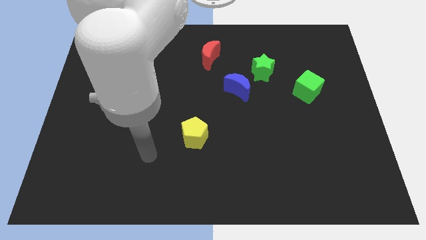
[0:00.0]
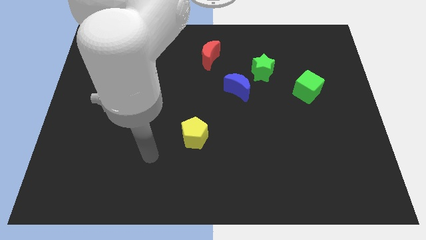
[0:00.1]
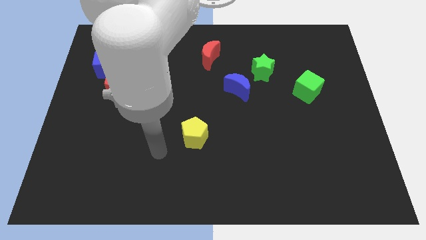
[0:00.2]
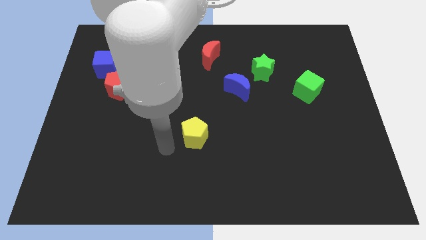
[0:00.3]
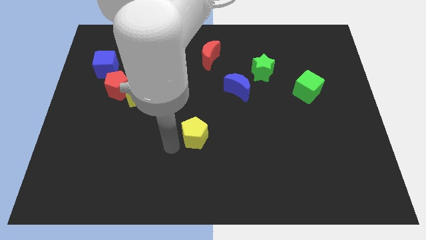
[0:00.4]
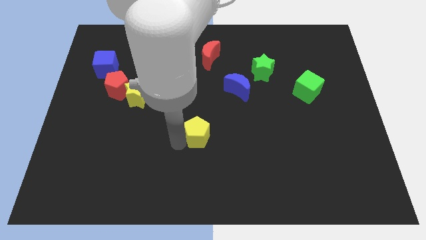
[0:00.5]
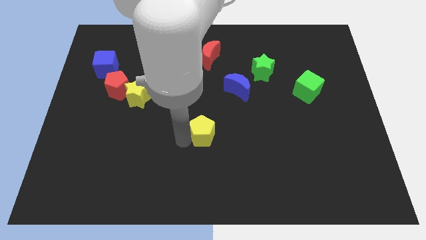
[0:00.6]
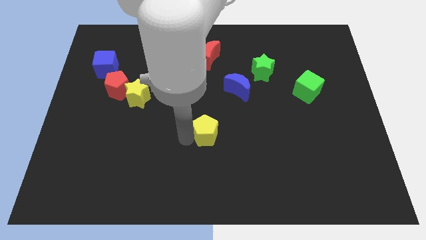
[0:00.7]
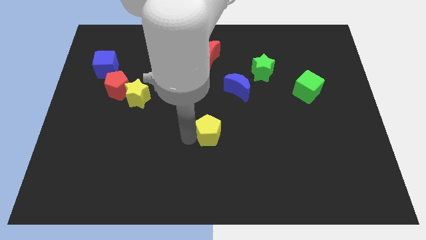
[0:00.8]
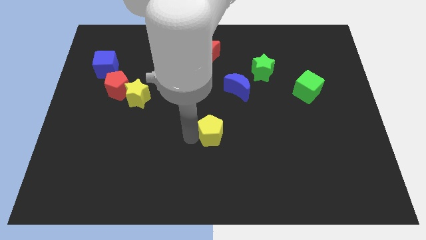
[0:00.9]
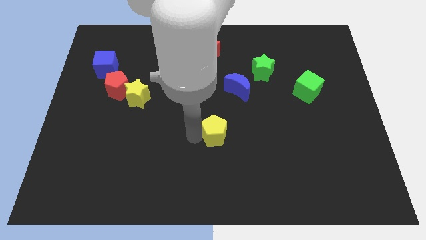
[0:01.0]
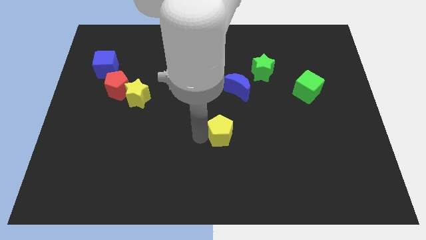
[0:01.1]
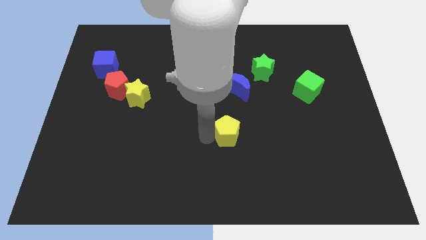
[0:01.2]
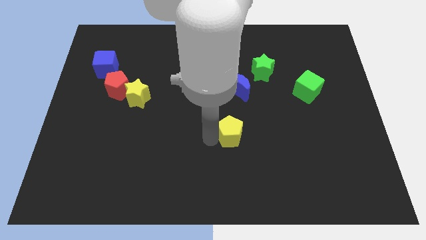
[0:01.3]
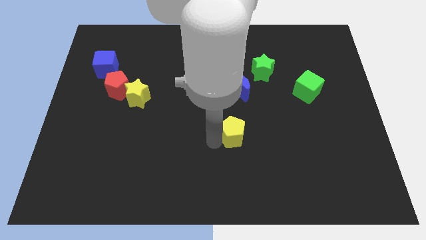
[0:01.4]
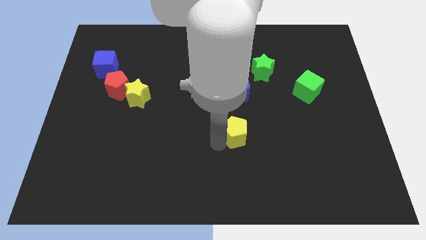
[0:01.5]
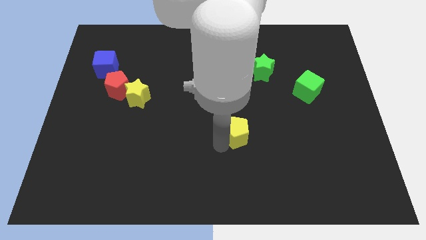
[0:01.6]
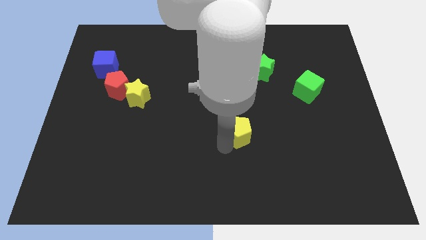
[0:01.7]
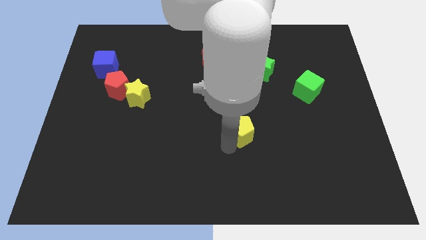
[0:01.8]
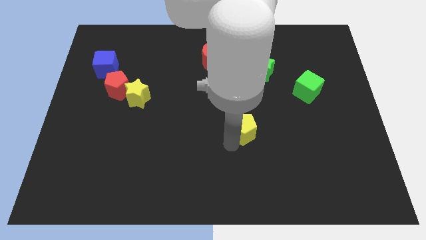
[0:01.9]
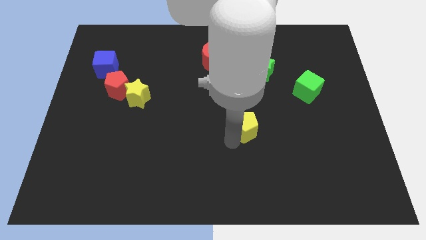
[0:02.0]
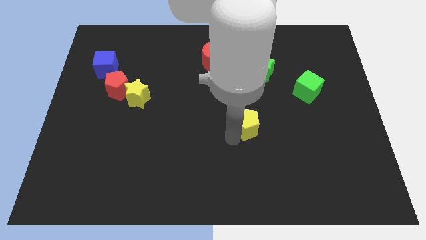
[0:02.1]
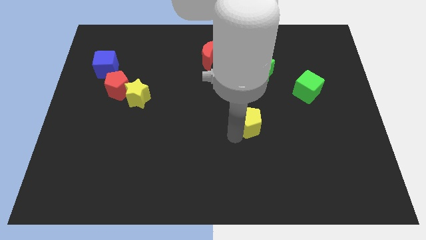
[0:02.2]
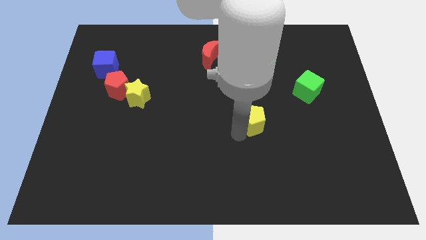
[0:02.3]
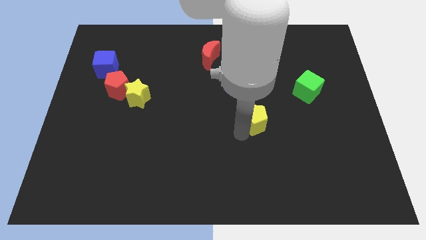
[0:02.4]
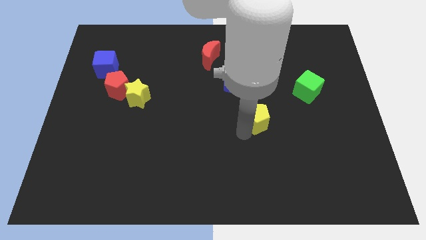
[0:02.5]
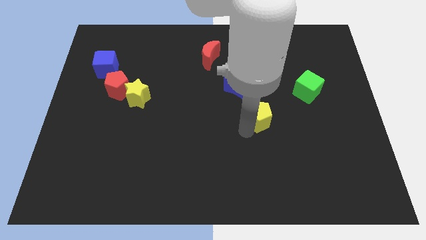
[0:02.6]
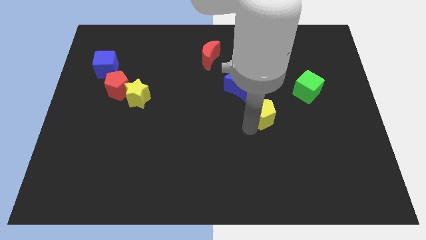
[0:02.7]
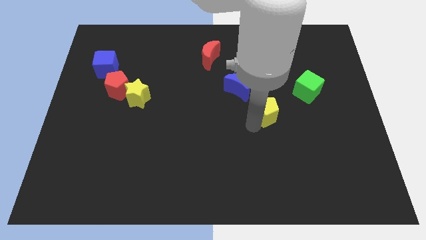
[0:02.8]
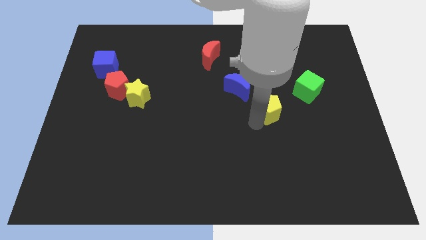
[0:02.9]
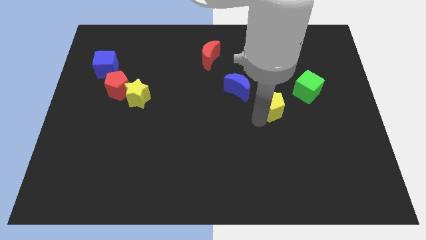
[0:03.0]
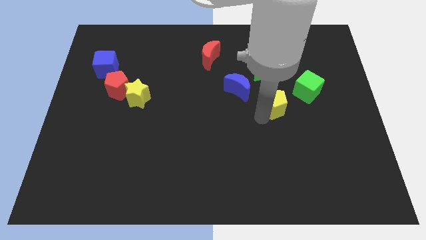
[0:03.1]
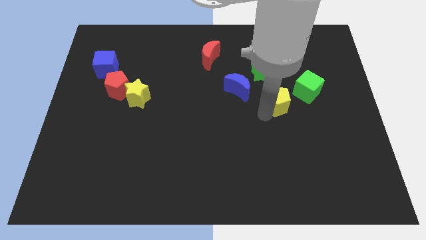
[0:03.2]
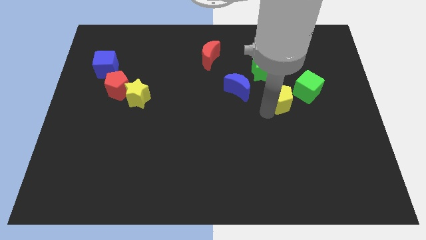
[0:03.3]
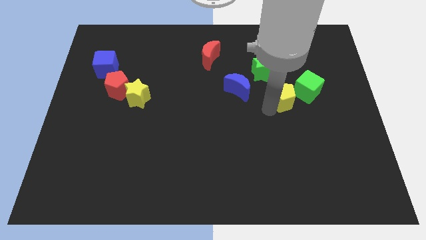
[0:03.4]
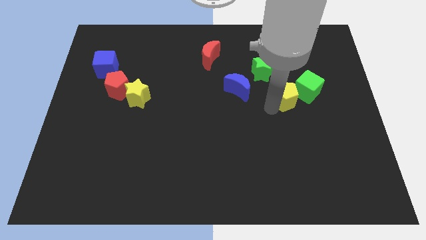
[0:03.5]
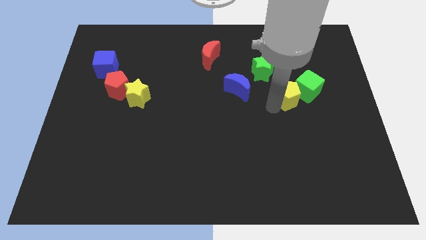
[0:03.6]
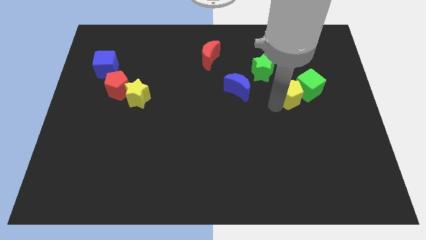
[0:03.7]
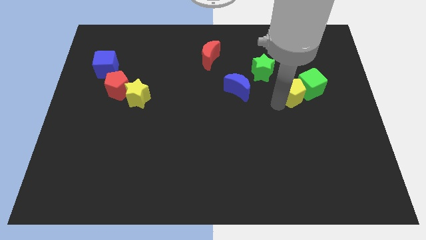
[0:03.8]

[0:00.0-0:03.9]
put the yellow pentagon towards the green cube

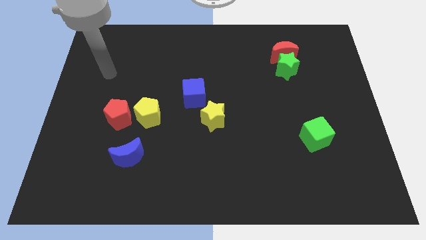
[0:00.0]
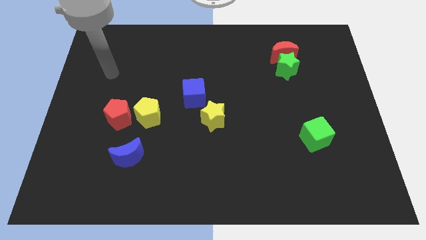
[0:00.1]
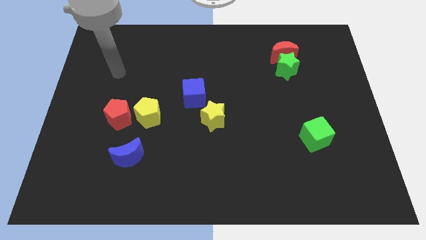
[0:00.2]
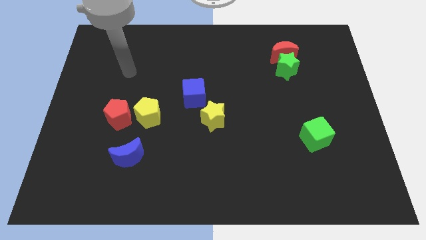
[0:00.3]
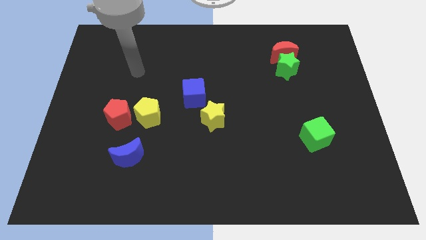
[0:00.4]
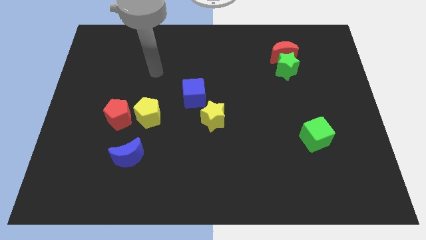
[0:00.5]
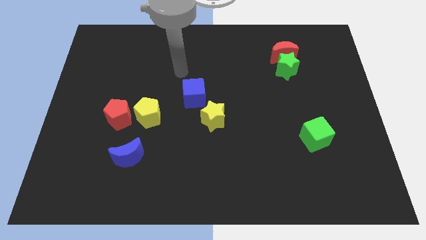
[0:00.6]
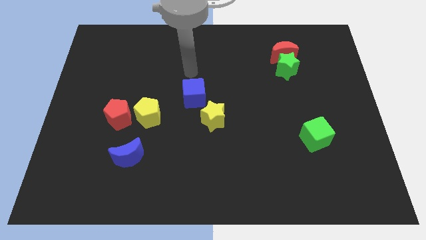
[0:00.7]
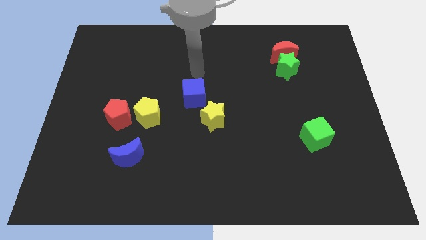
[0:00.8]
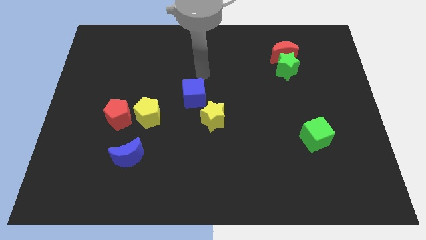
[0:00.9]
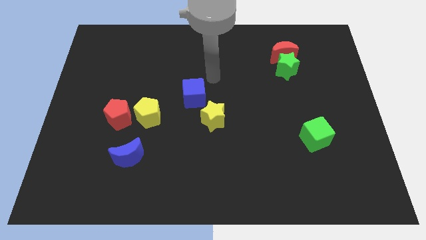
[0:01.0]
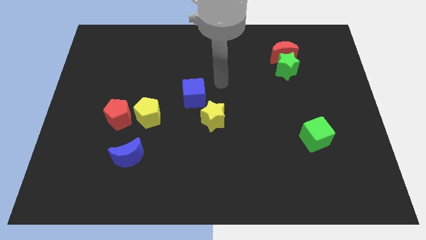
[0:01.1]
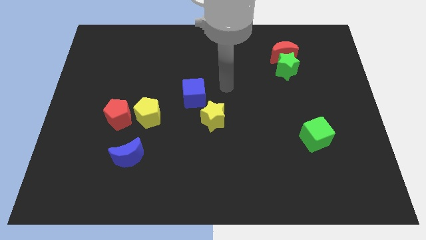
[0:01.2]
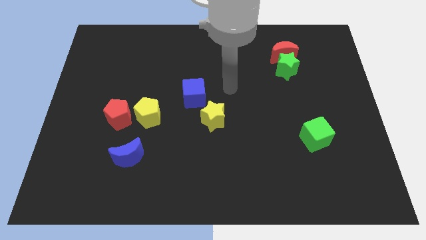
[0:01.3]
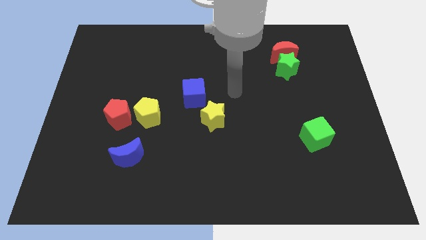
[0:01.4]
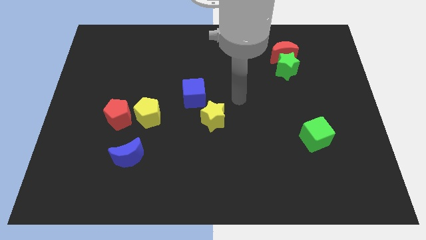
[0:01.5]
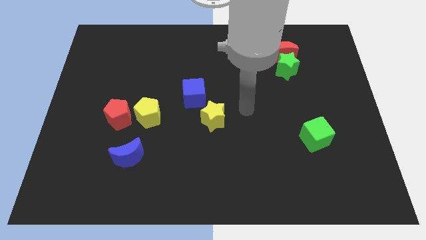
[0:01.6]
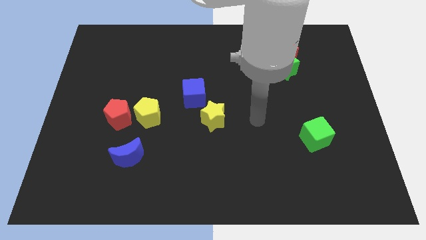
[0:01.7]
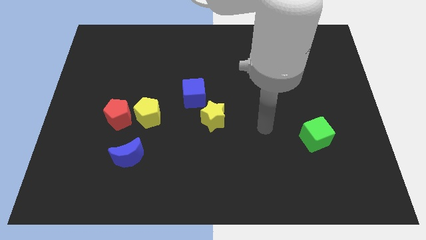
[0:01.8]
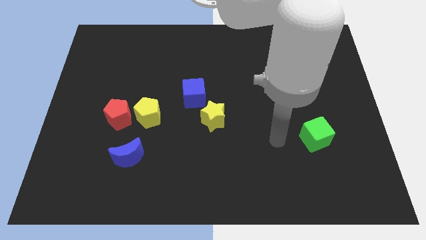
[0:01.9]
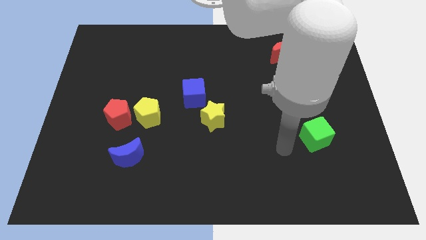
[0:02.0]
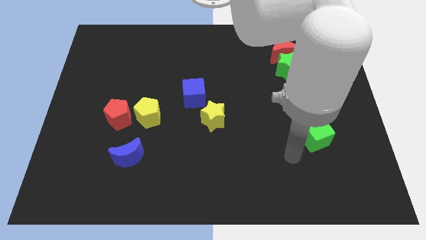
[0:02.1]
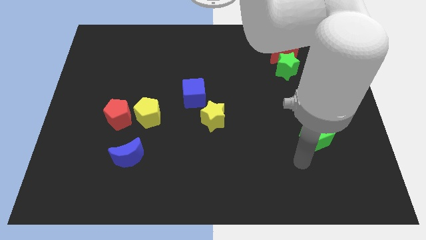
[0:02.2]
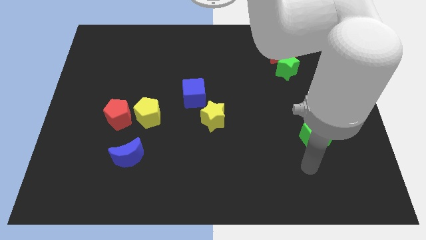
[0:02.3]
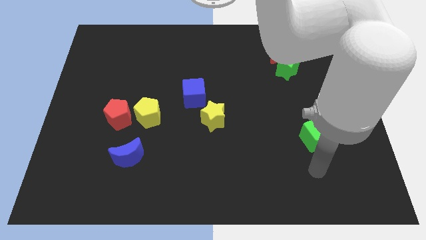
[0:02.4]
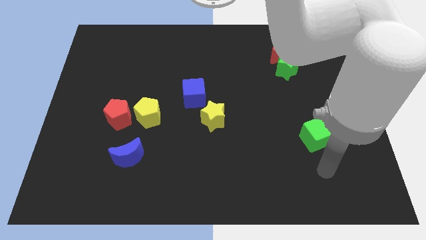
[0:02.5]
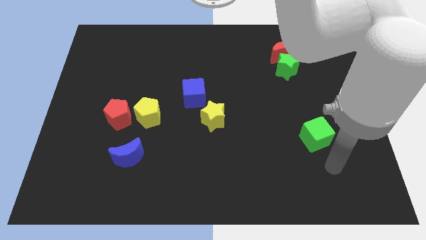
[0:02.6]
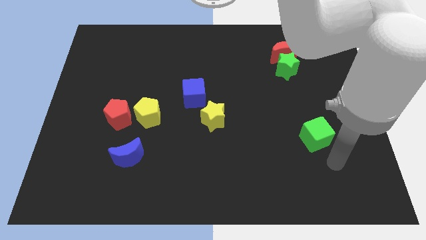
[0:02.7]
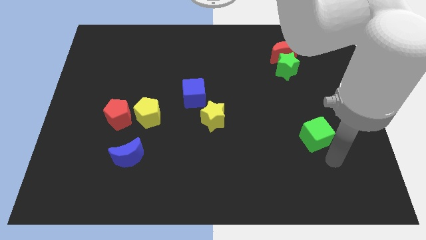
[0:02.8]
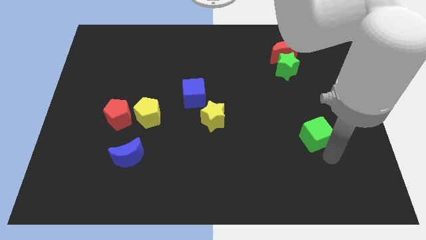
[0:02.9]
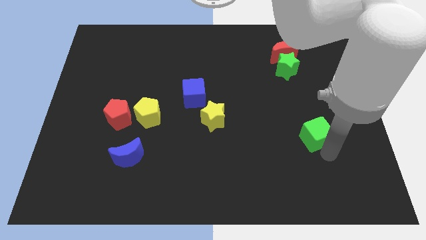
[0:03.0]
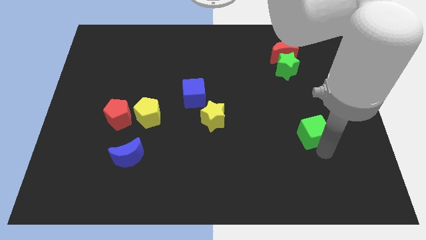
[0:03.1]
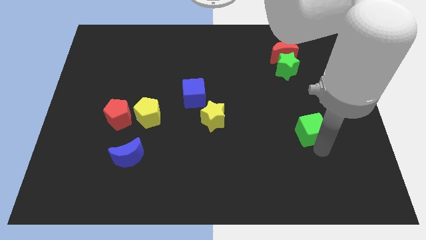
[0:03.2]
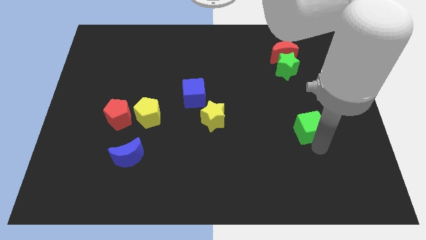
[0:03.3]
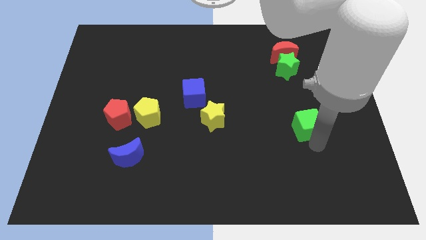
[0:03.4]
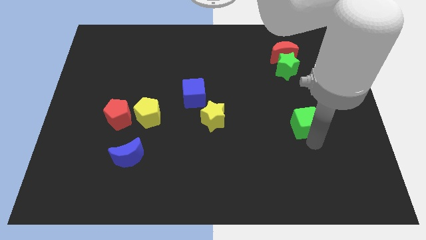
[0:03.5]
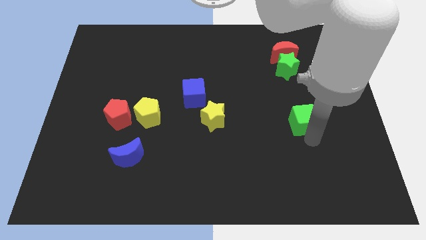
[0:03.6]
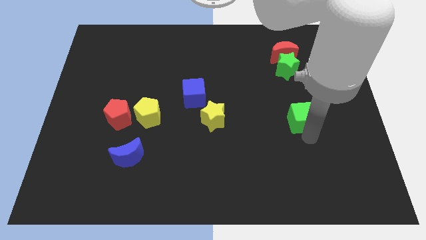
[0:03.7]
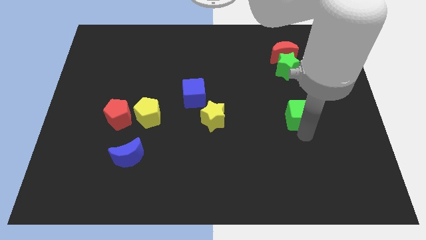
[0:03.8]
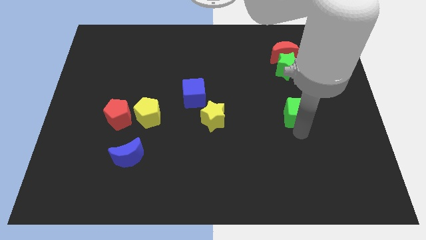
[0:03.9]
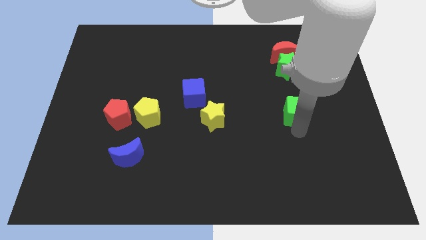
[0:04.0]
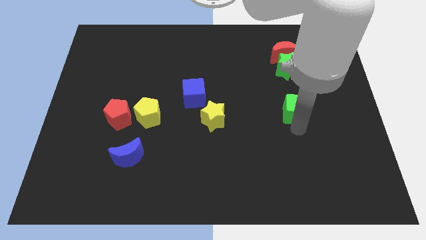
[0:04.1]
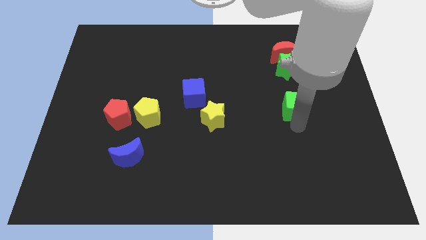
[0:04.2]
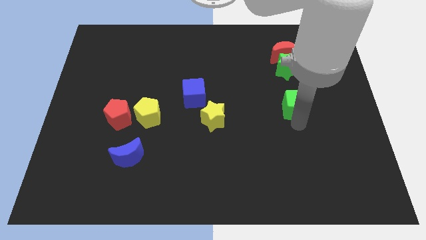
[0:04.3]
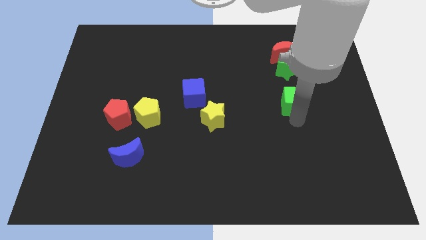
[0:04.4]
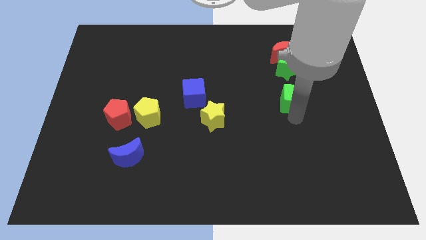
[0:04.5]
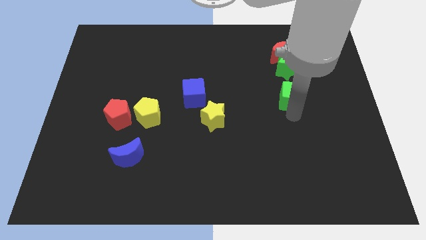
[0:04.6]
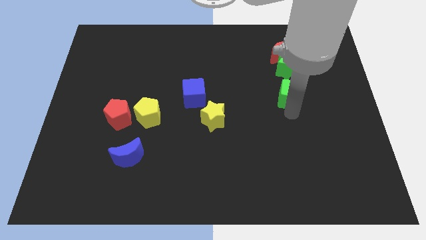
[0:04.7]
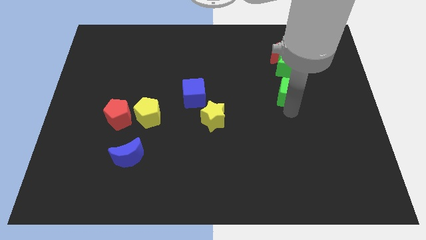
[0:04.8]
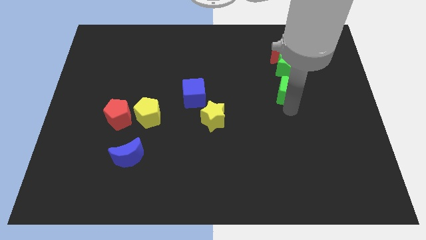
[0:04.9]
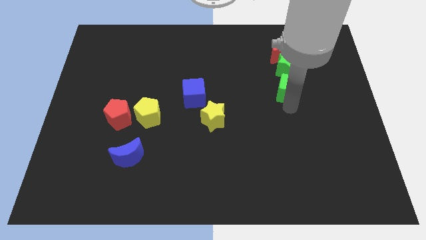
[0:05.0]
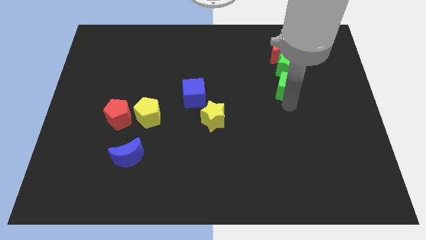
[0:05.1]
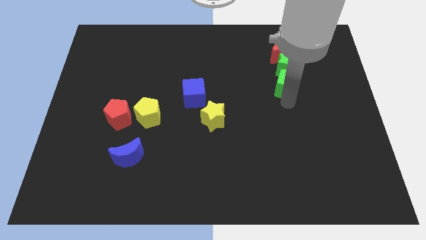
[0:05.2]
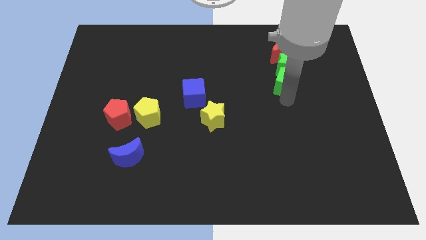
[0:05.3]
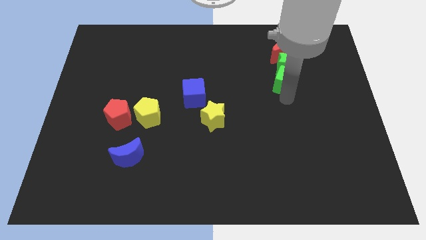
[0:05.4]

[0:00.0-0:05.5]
move the green cube next to the green star
